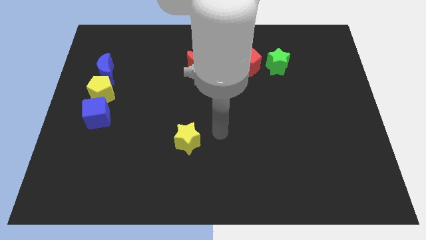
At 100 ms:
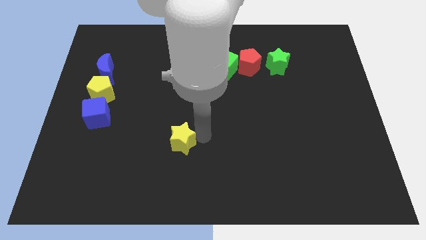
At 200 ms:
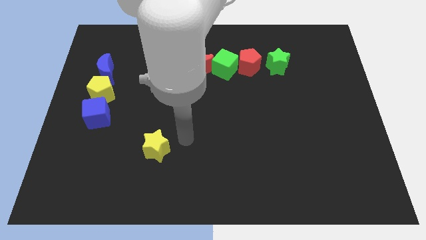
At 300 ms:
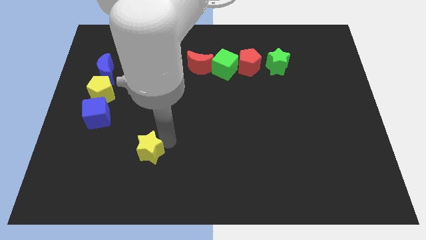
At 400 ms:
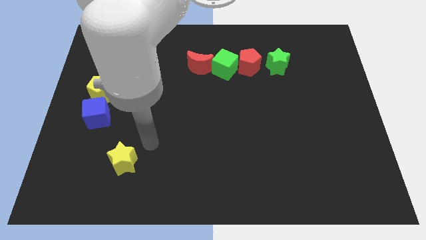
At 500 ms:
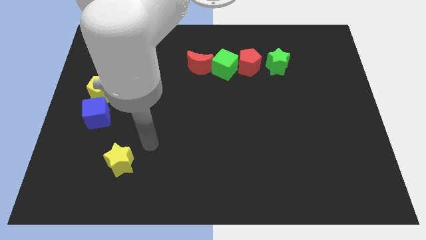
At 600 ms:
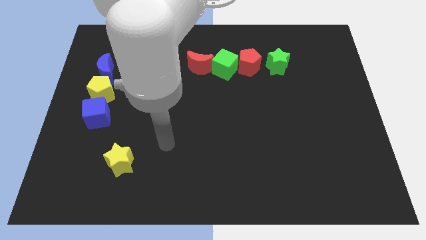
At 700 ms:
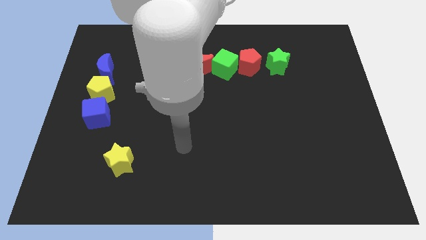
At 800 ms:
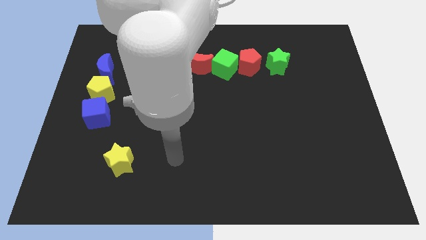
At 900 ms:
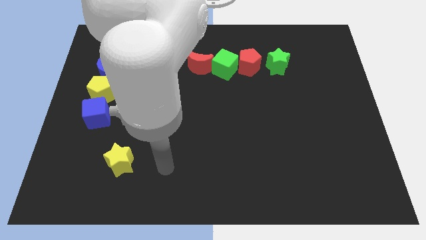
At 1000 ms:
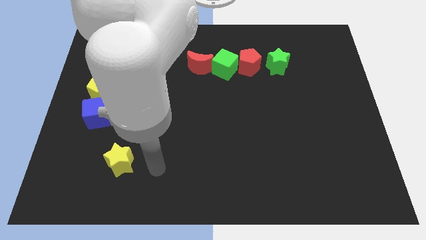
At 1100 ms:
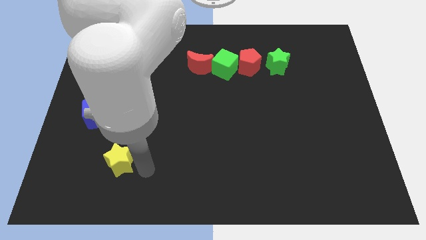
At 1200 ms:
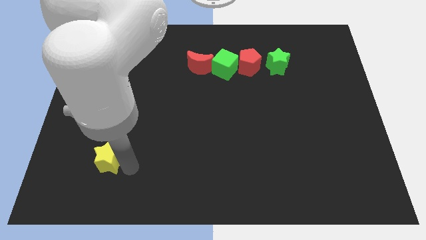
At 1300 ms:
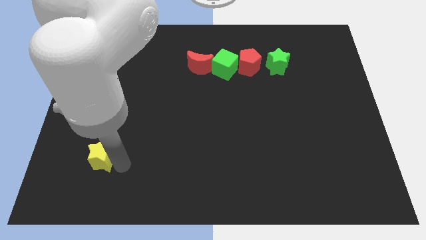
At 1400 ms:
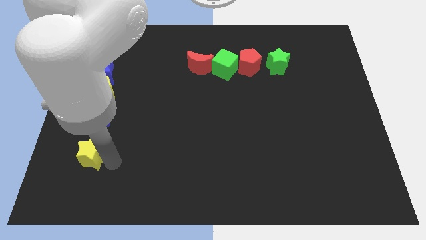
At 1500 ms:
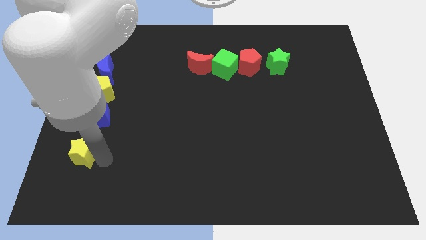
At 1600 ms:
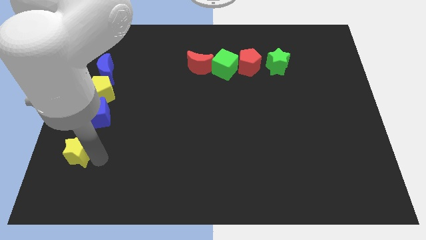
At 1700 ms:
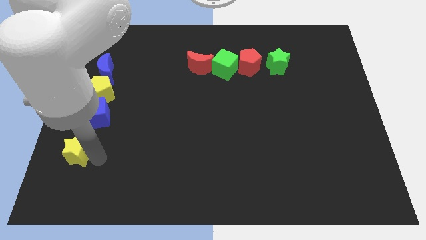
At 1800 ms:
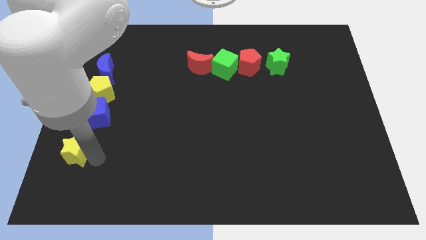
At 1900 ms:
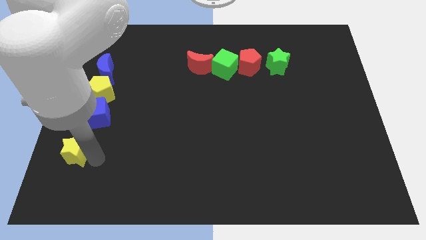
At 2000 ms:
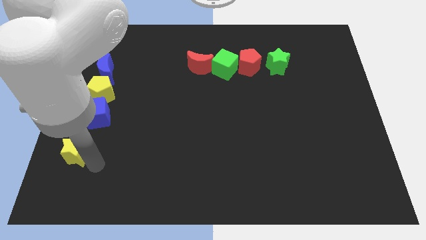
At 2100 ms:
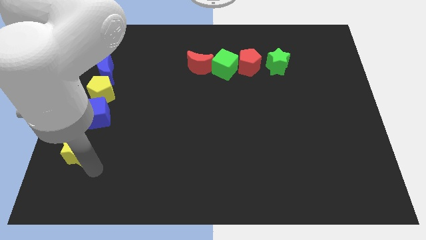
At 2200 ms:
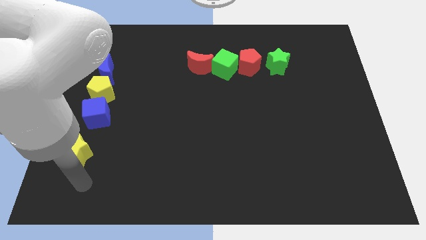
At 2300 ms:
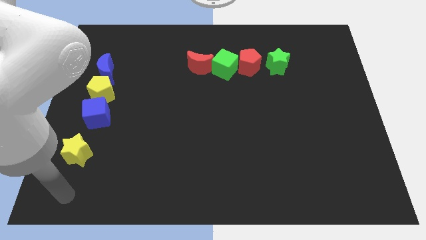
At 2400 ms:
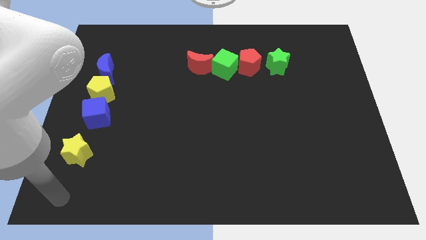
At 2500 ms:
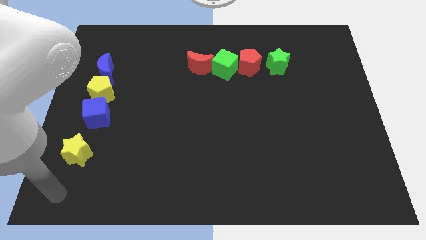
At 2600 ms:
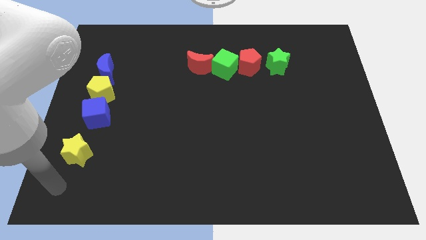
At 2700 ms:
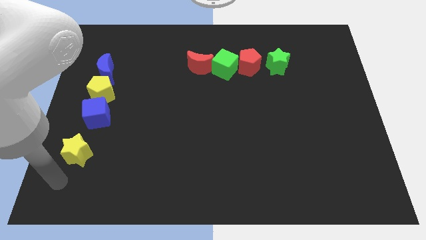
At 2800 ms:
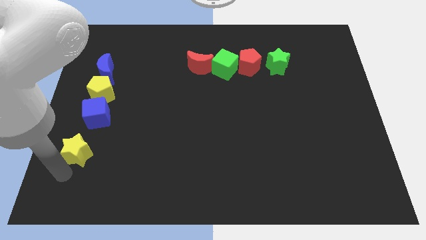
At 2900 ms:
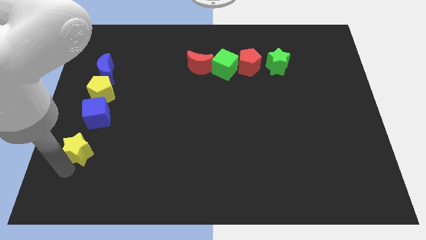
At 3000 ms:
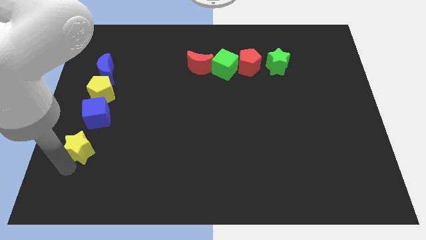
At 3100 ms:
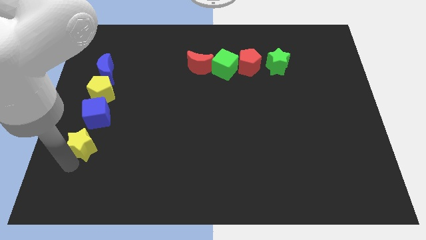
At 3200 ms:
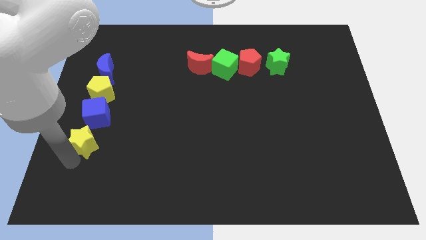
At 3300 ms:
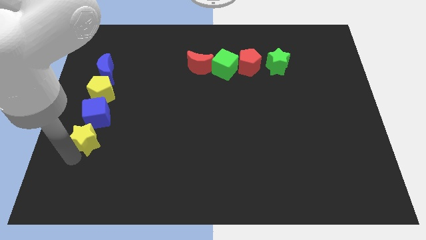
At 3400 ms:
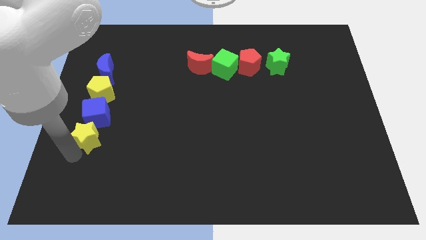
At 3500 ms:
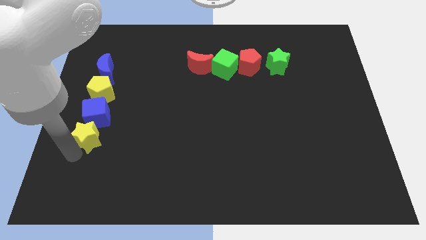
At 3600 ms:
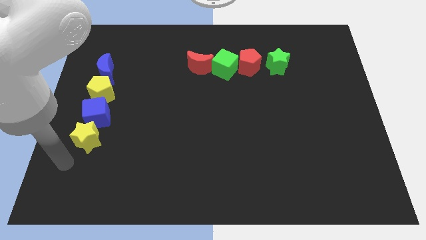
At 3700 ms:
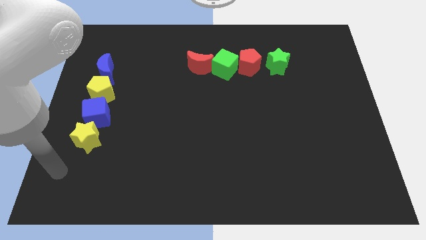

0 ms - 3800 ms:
place the yellow star down to the blue cube

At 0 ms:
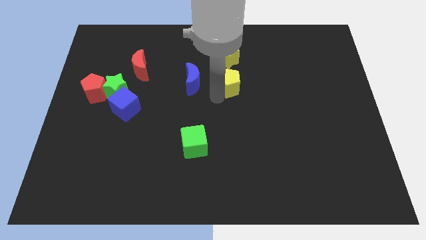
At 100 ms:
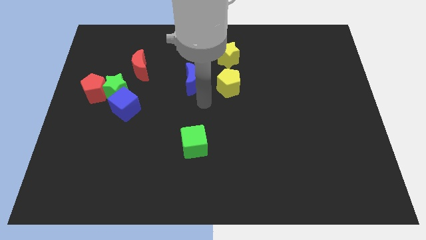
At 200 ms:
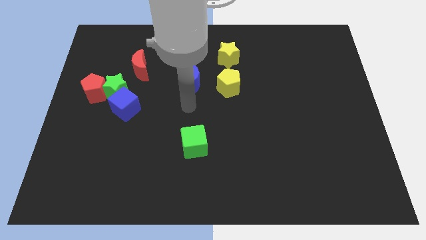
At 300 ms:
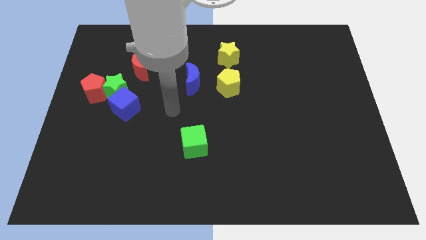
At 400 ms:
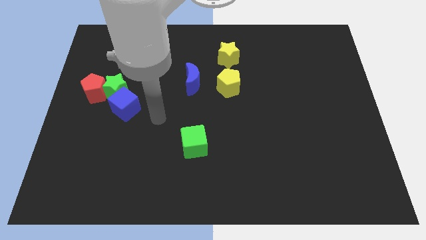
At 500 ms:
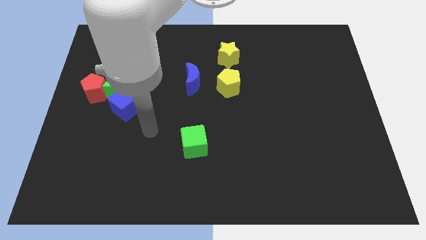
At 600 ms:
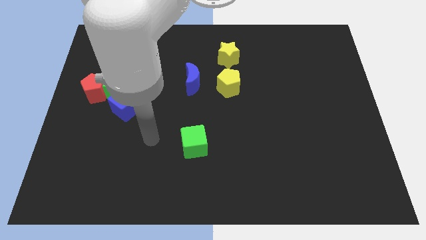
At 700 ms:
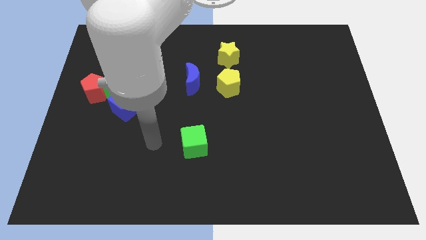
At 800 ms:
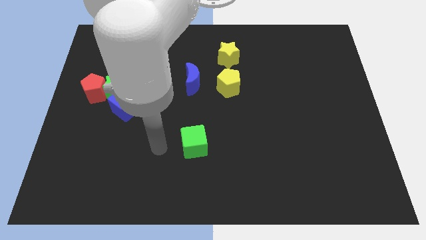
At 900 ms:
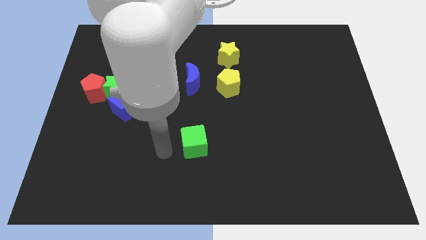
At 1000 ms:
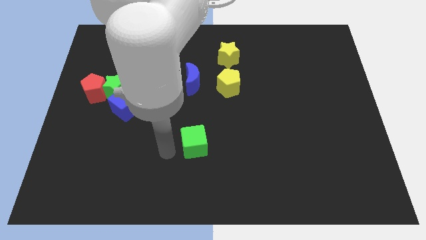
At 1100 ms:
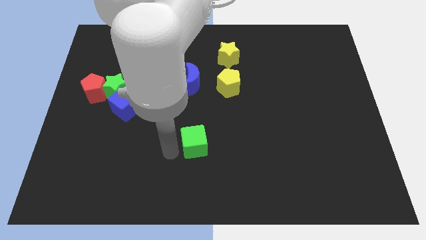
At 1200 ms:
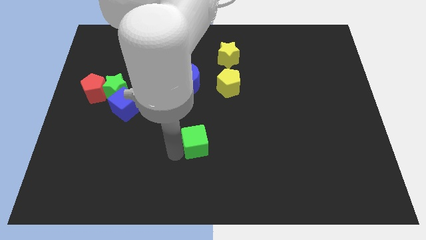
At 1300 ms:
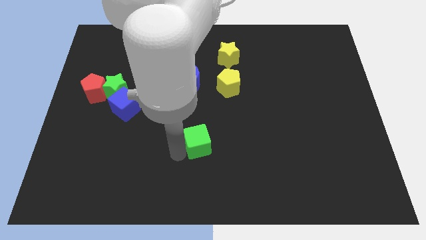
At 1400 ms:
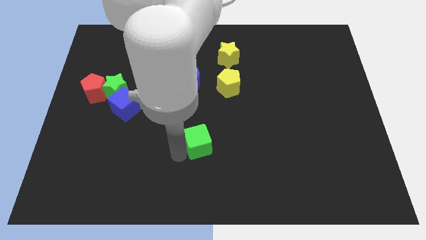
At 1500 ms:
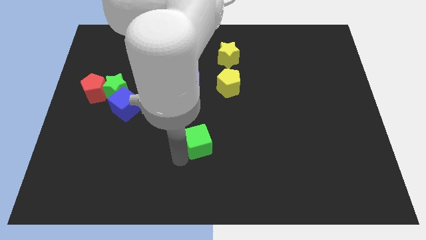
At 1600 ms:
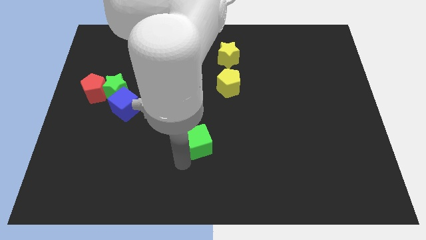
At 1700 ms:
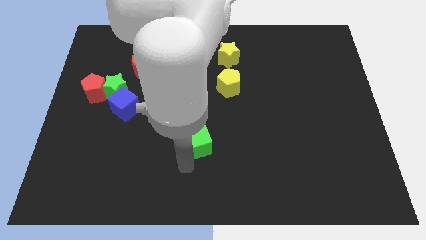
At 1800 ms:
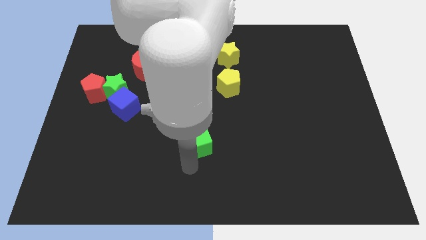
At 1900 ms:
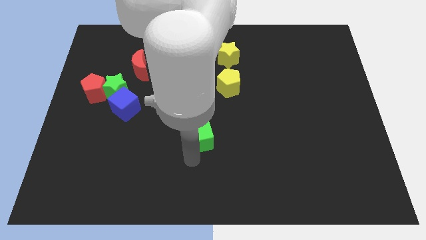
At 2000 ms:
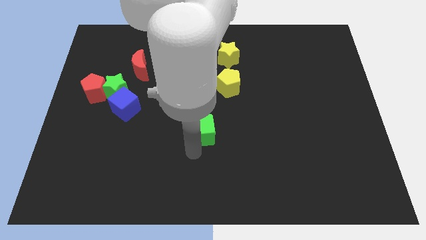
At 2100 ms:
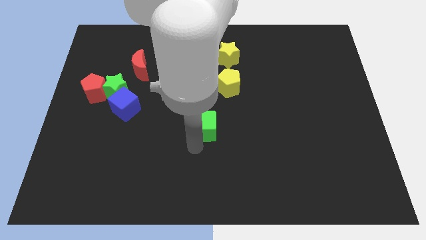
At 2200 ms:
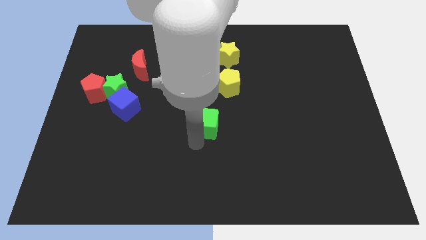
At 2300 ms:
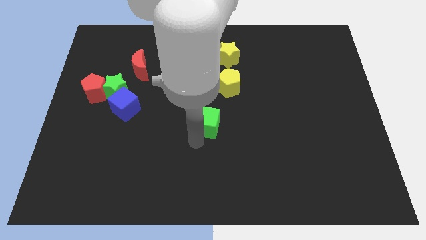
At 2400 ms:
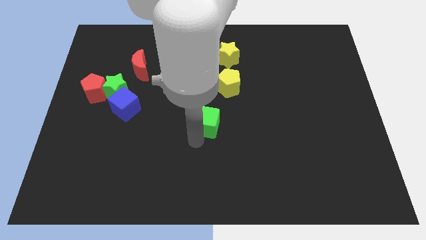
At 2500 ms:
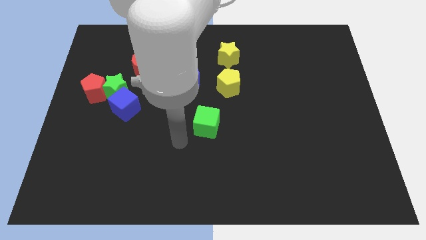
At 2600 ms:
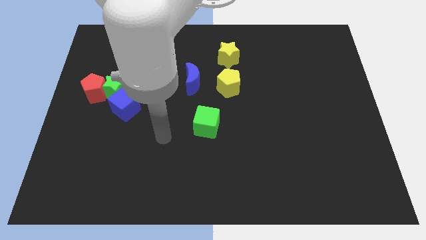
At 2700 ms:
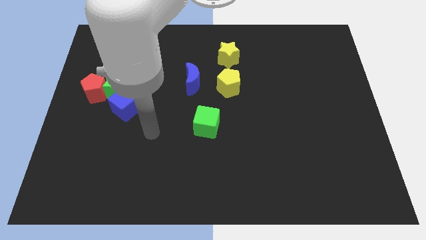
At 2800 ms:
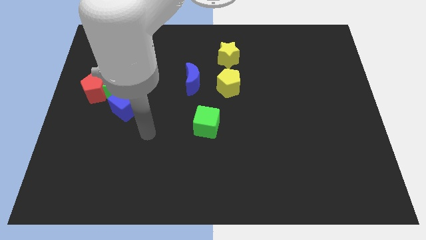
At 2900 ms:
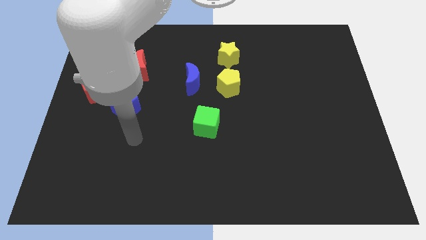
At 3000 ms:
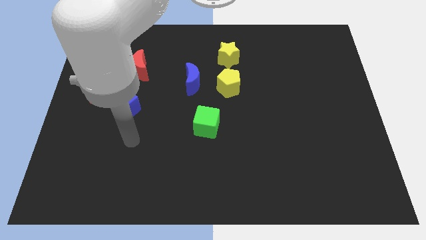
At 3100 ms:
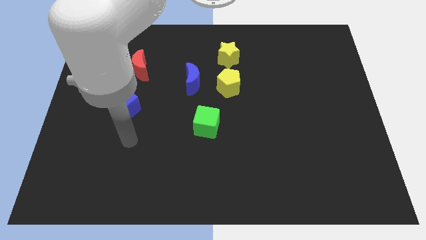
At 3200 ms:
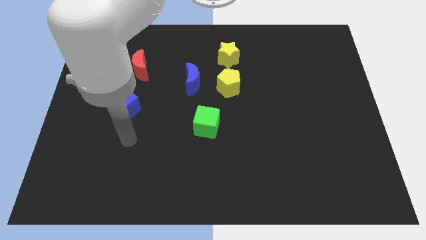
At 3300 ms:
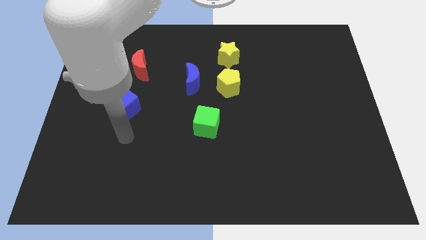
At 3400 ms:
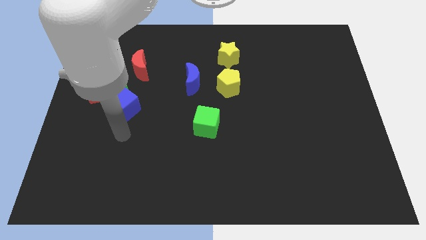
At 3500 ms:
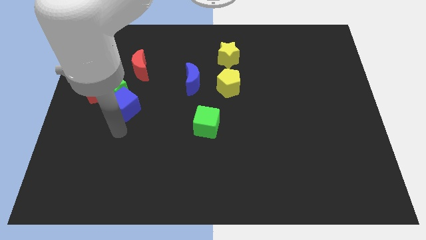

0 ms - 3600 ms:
move the green cube to the center of the board

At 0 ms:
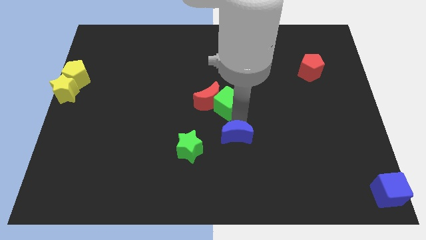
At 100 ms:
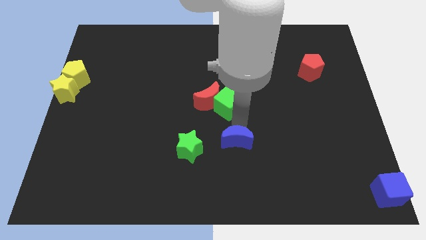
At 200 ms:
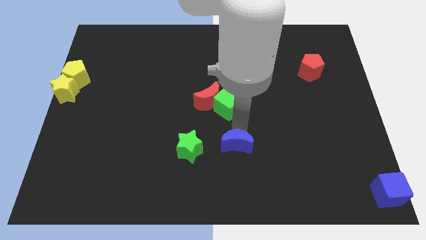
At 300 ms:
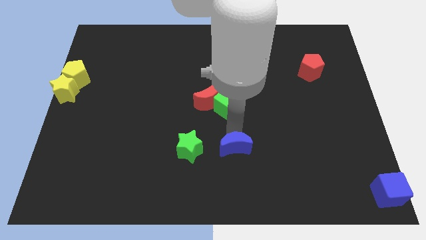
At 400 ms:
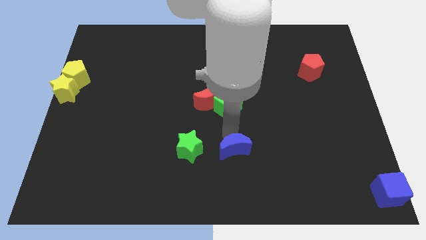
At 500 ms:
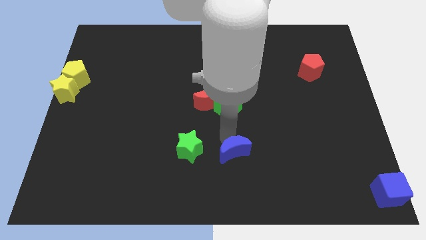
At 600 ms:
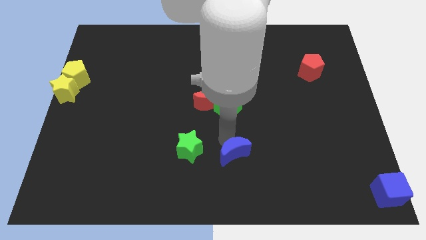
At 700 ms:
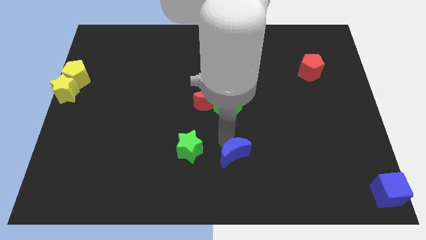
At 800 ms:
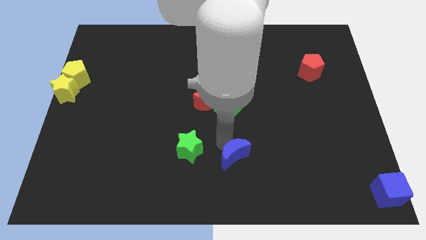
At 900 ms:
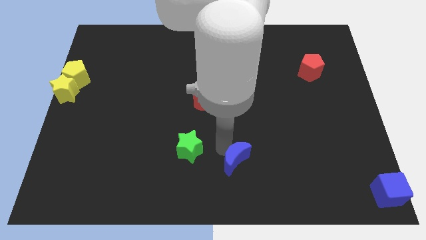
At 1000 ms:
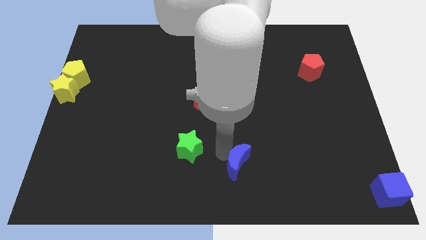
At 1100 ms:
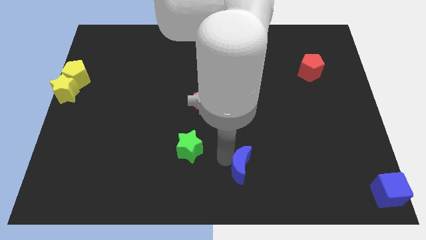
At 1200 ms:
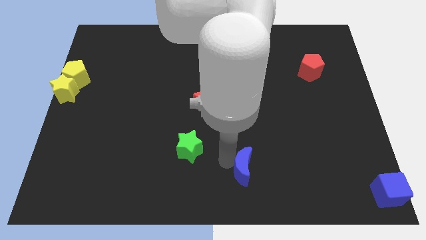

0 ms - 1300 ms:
separate the blue moon from a group of blocks

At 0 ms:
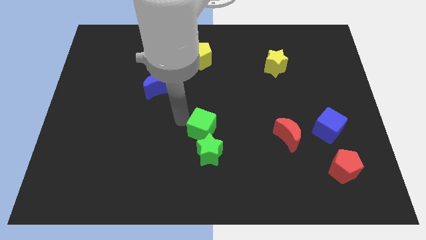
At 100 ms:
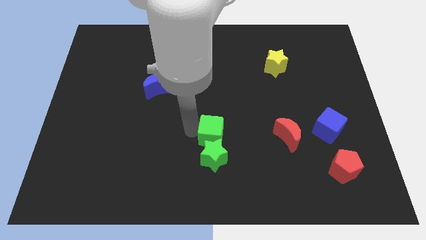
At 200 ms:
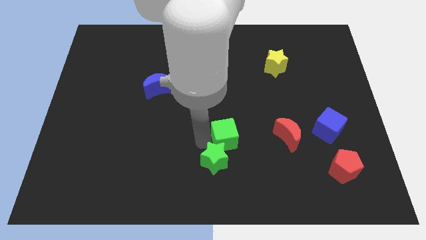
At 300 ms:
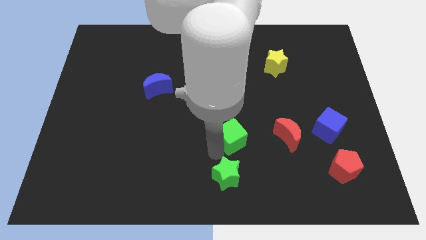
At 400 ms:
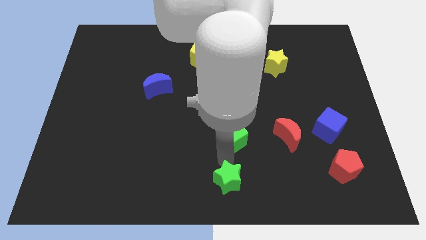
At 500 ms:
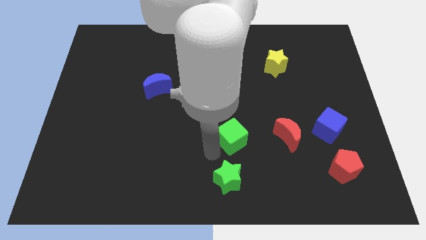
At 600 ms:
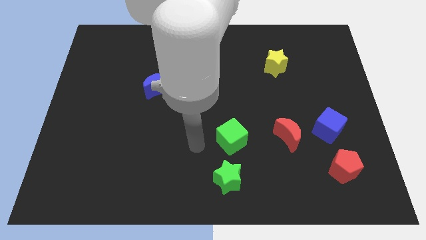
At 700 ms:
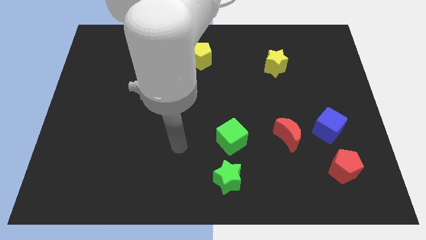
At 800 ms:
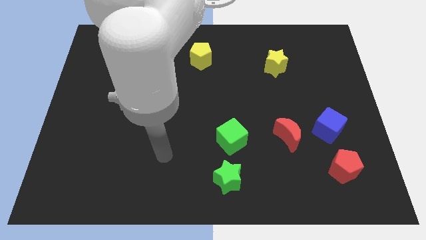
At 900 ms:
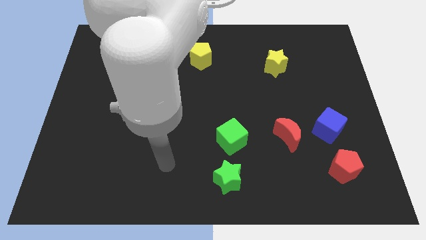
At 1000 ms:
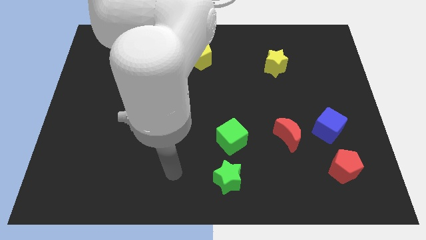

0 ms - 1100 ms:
separate green star and green cube
